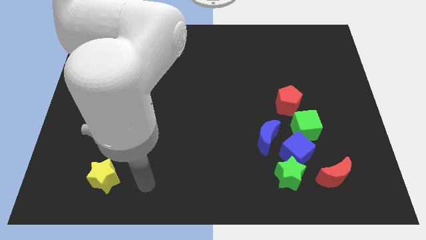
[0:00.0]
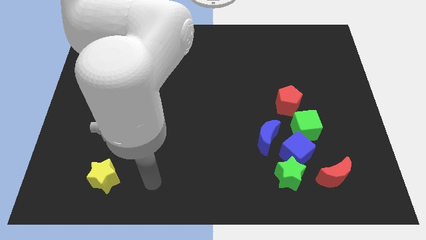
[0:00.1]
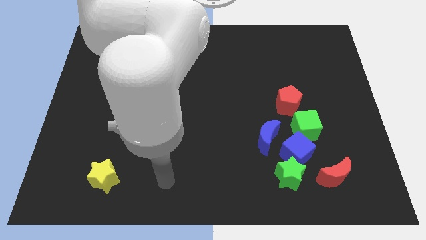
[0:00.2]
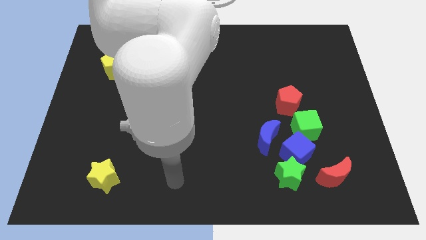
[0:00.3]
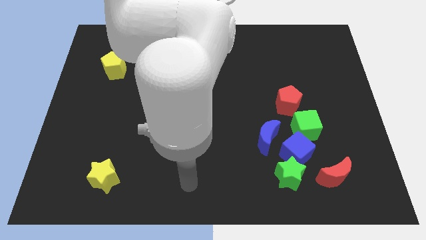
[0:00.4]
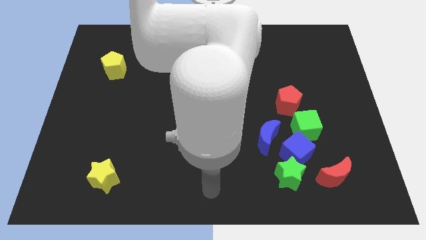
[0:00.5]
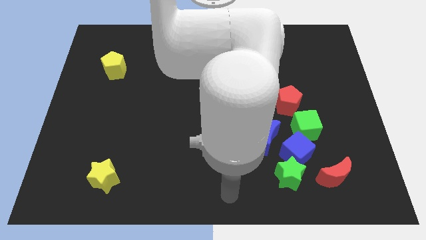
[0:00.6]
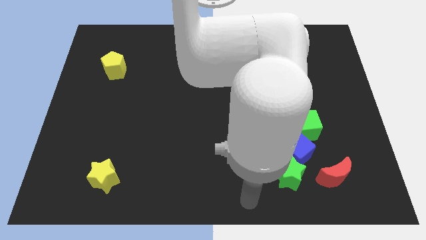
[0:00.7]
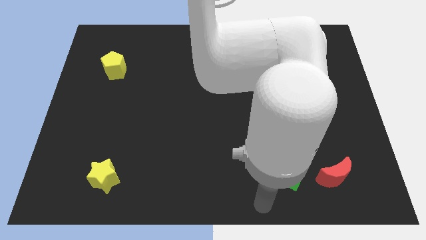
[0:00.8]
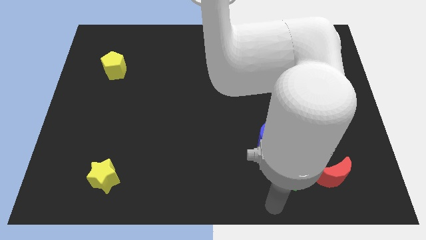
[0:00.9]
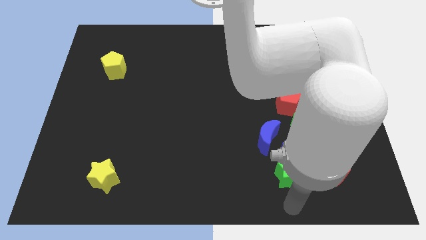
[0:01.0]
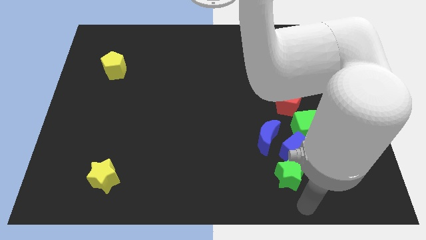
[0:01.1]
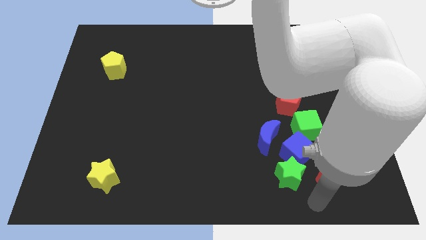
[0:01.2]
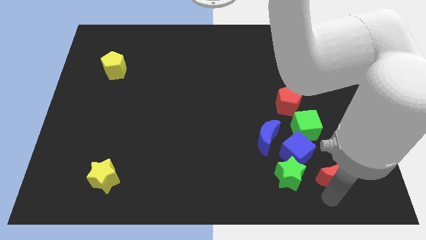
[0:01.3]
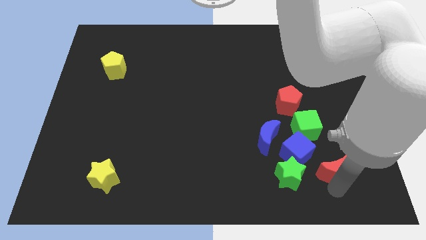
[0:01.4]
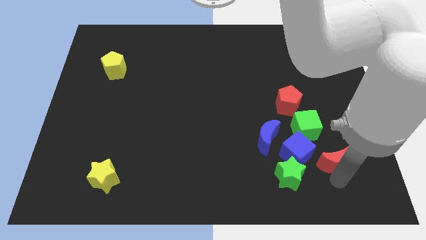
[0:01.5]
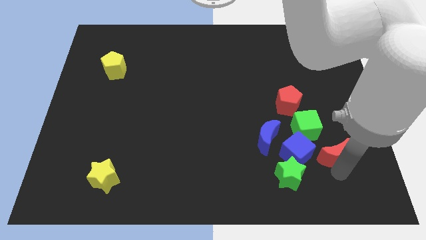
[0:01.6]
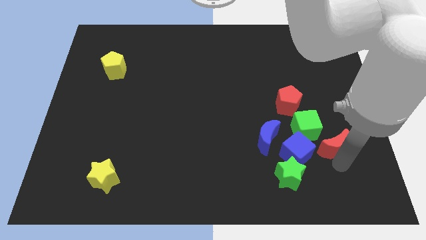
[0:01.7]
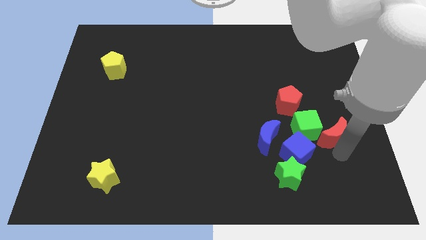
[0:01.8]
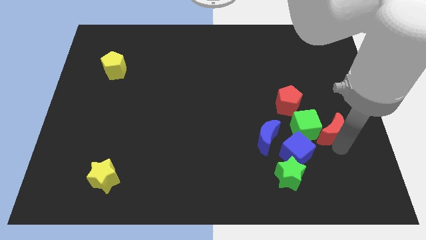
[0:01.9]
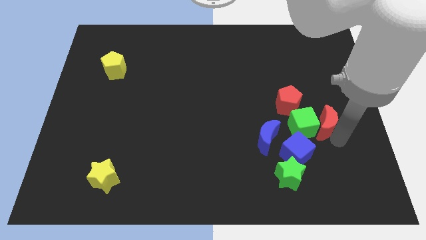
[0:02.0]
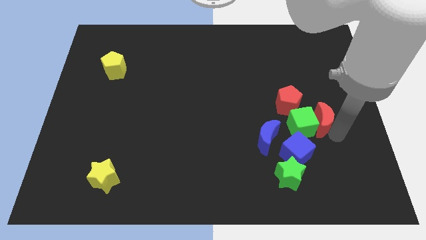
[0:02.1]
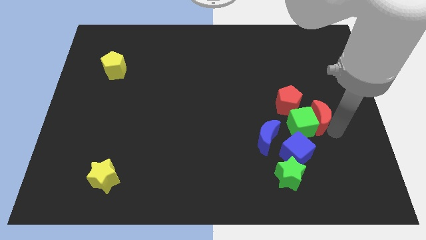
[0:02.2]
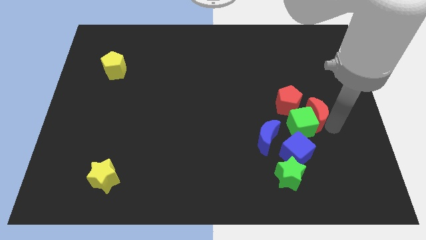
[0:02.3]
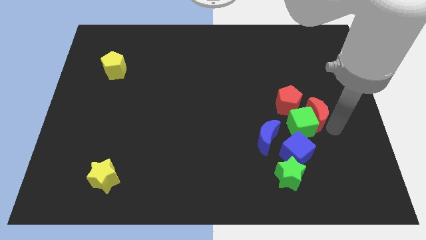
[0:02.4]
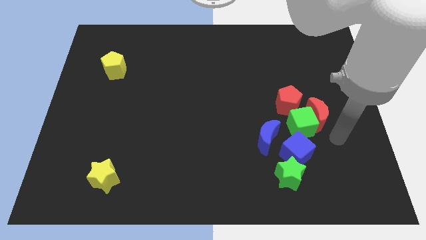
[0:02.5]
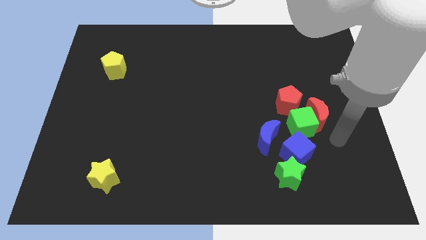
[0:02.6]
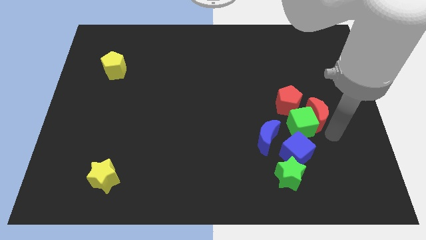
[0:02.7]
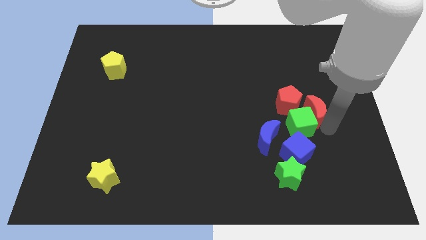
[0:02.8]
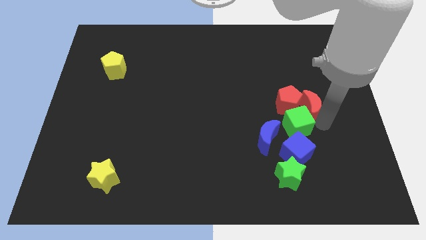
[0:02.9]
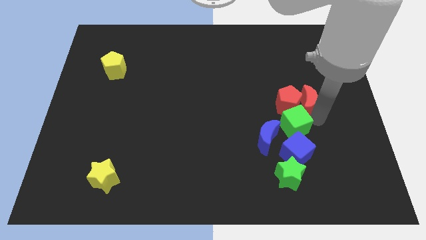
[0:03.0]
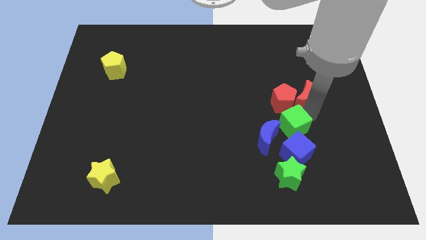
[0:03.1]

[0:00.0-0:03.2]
move the red moon close to the red pentagon

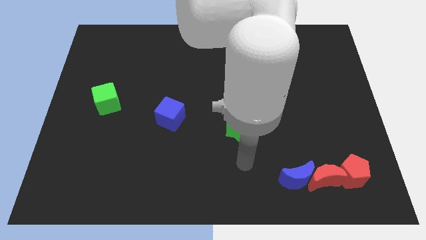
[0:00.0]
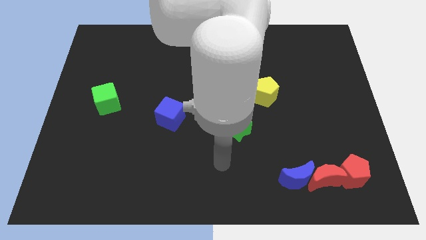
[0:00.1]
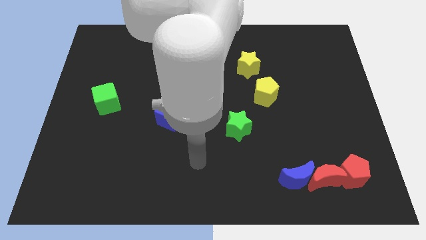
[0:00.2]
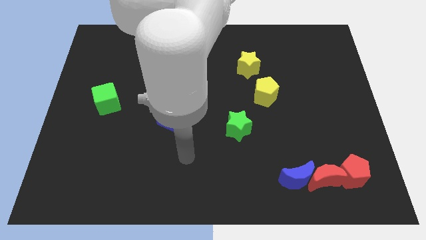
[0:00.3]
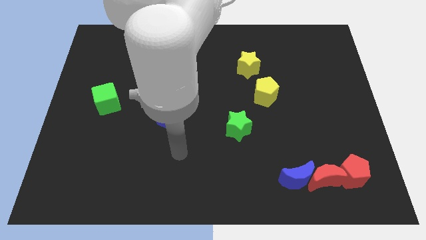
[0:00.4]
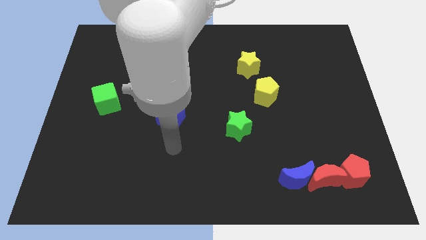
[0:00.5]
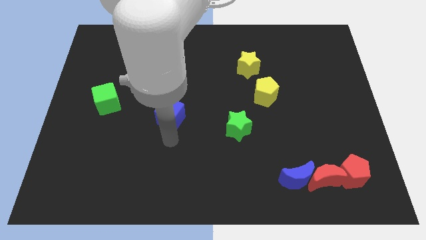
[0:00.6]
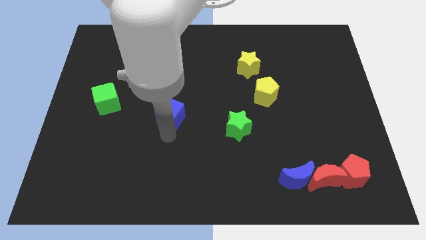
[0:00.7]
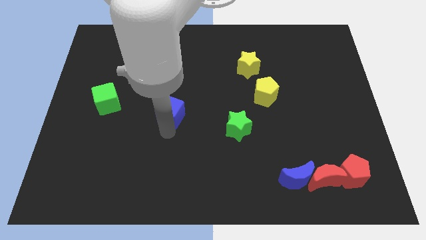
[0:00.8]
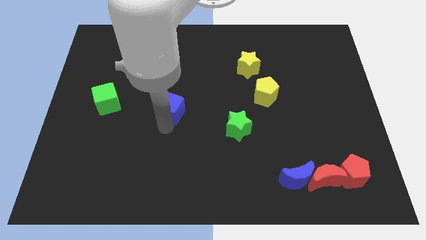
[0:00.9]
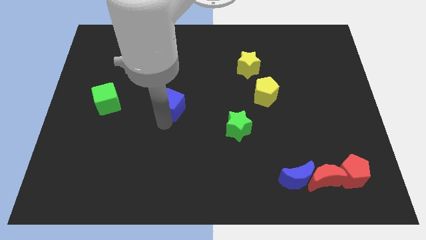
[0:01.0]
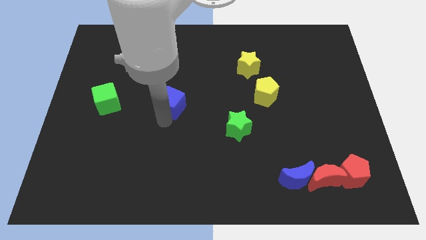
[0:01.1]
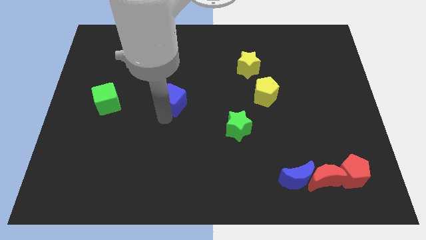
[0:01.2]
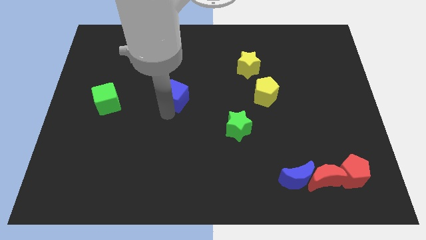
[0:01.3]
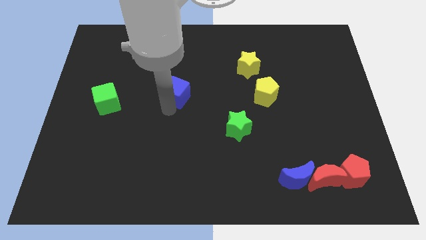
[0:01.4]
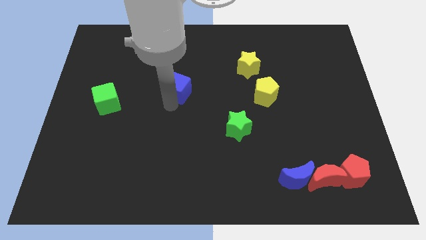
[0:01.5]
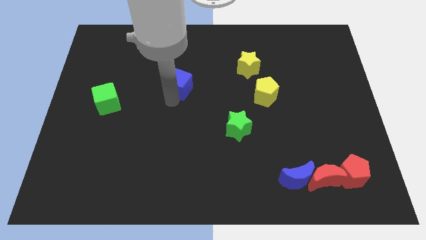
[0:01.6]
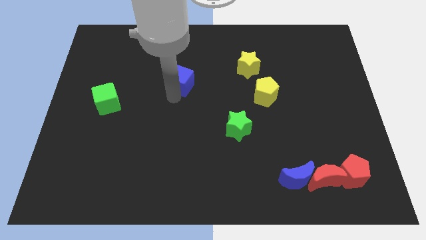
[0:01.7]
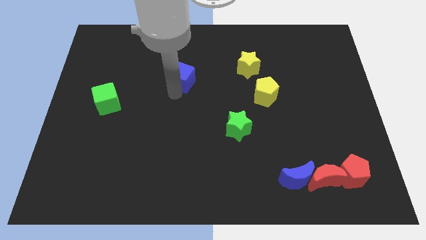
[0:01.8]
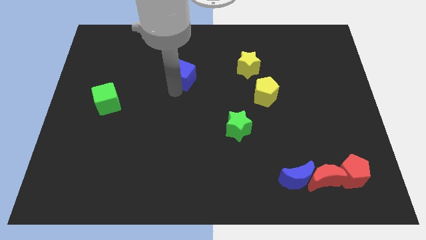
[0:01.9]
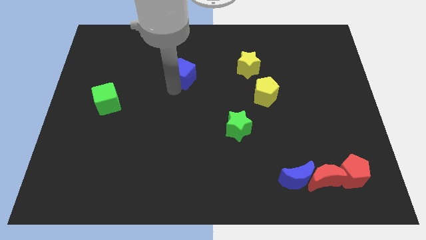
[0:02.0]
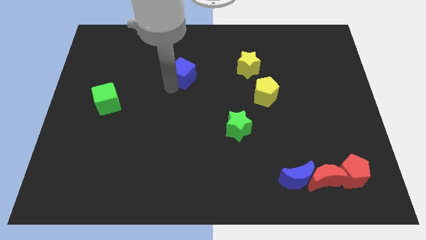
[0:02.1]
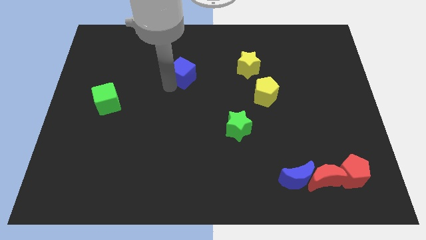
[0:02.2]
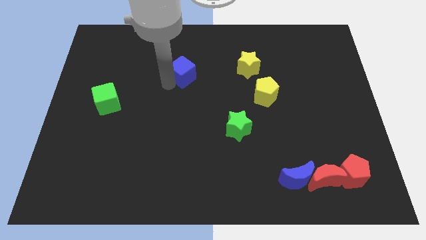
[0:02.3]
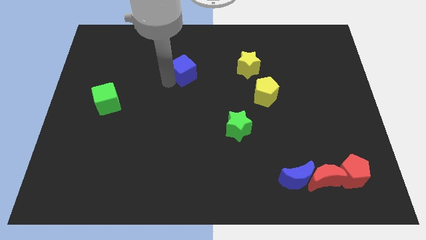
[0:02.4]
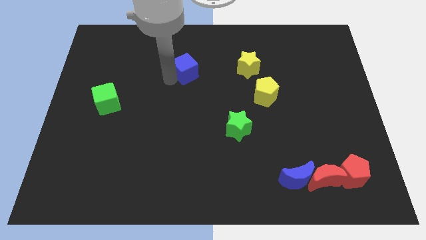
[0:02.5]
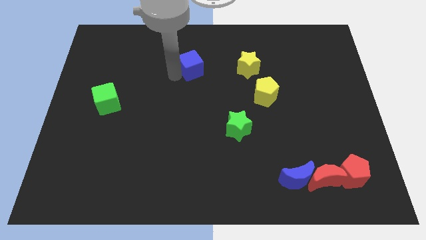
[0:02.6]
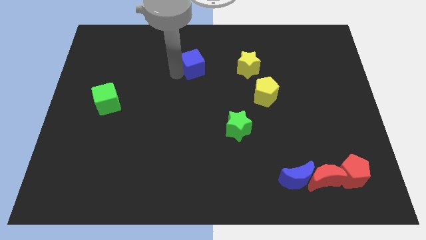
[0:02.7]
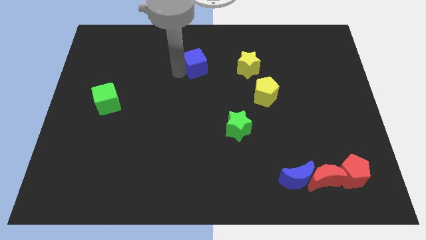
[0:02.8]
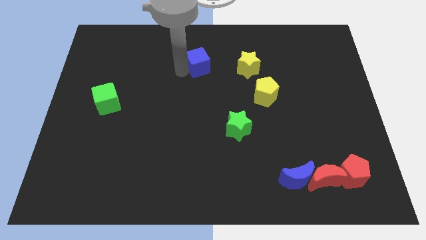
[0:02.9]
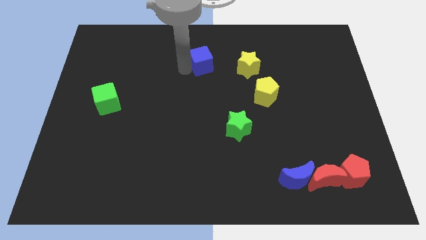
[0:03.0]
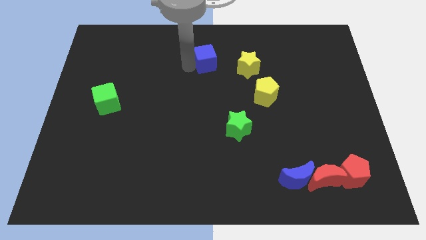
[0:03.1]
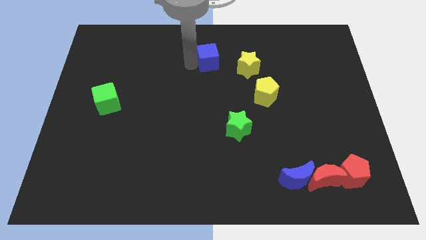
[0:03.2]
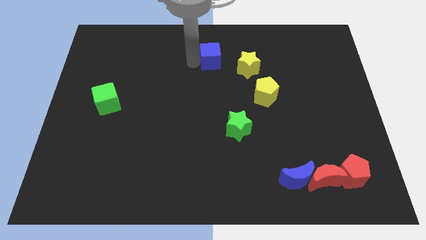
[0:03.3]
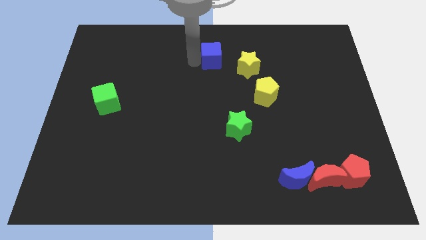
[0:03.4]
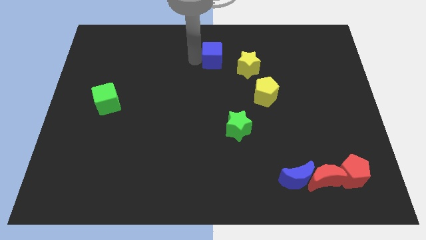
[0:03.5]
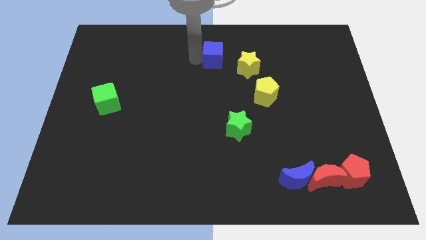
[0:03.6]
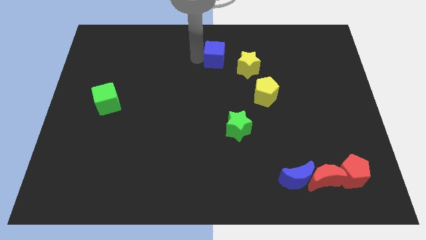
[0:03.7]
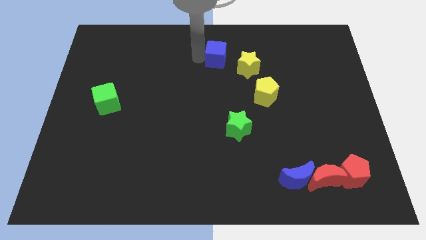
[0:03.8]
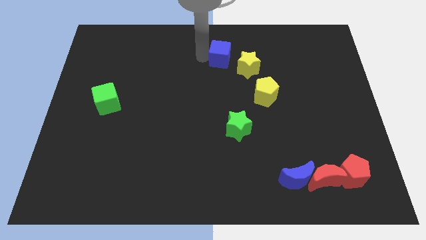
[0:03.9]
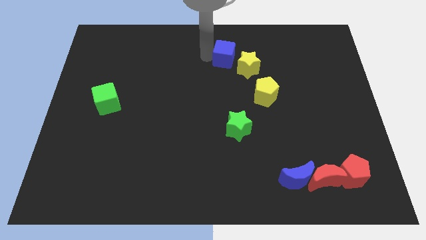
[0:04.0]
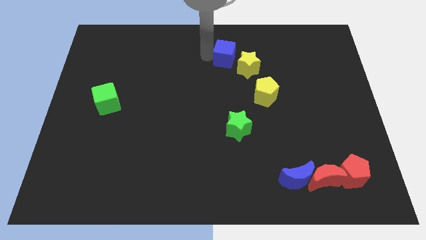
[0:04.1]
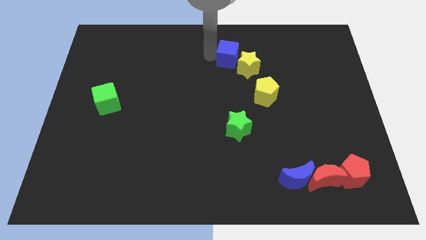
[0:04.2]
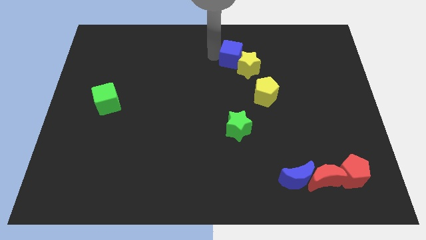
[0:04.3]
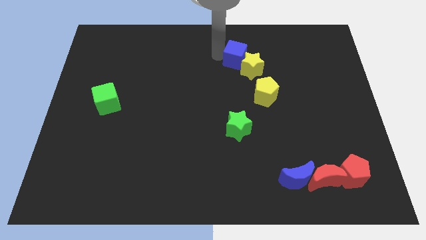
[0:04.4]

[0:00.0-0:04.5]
move the blue cube to the yellow star

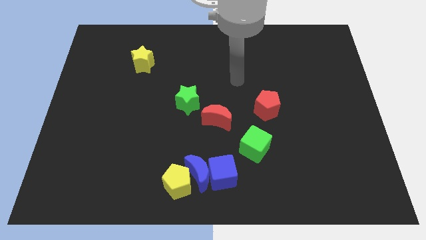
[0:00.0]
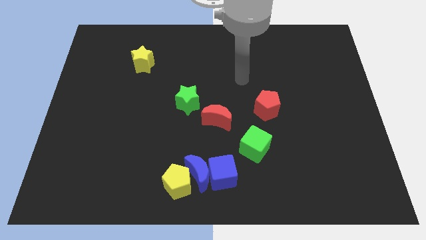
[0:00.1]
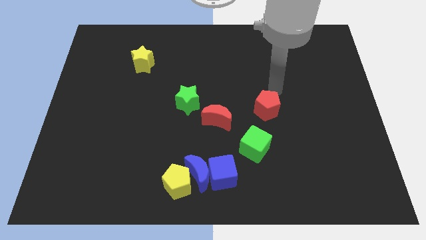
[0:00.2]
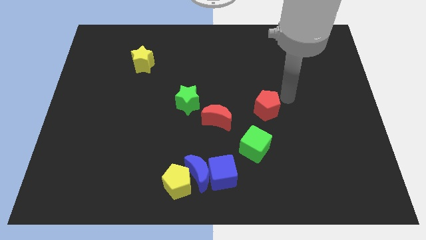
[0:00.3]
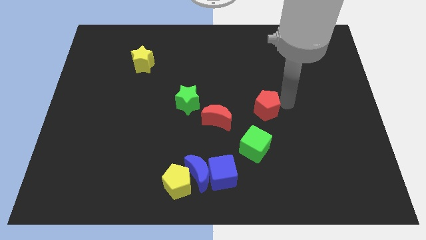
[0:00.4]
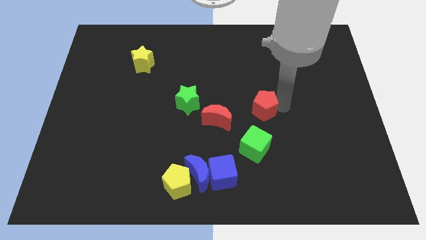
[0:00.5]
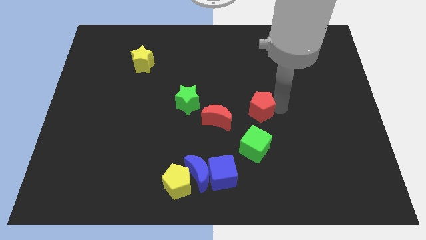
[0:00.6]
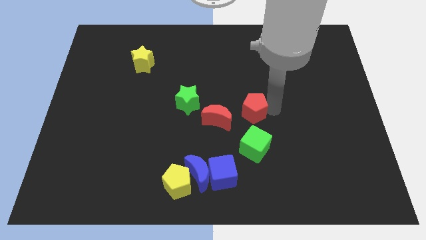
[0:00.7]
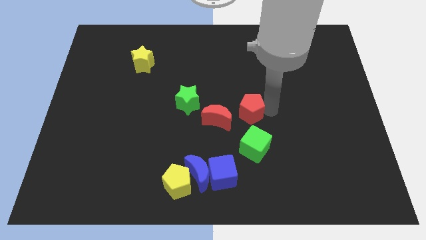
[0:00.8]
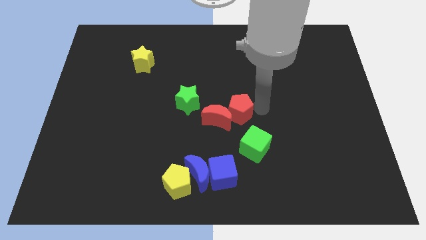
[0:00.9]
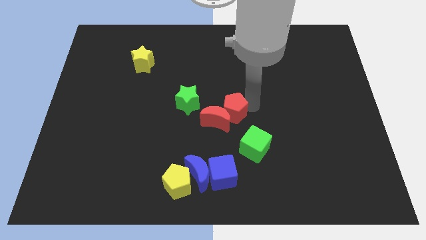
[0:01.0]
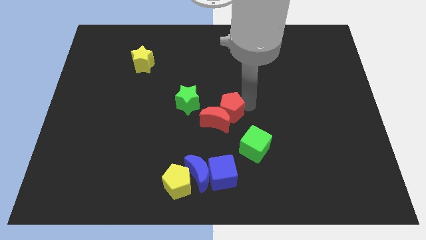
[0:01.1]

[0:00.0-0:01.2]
move the red pentagon towards the red moon
